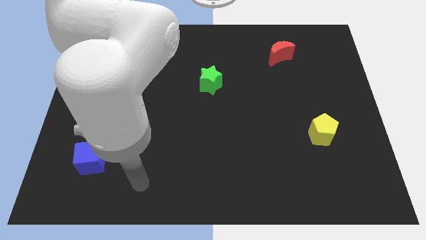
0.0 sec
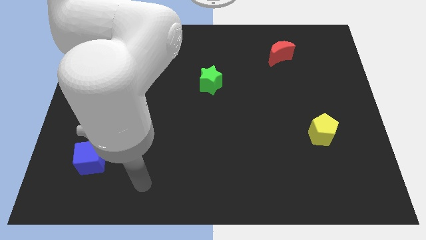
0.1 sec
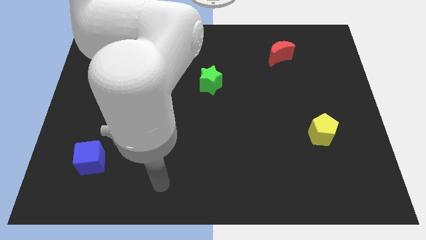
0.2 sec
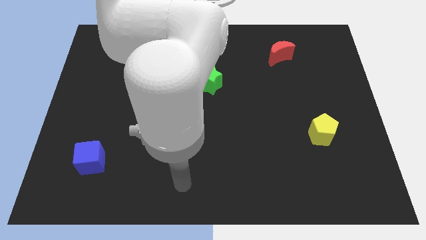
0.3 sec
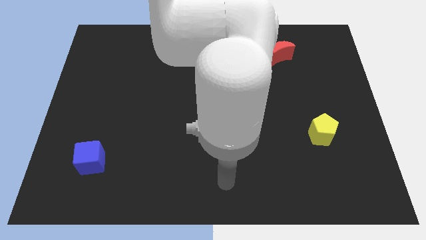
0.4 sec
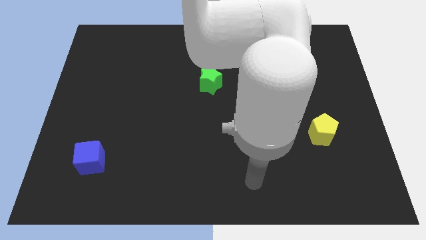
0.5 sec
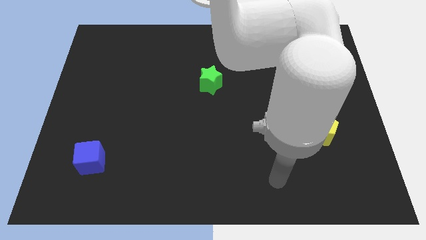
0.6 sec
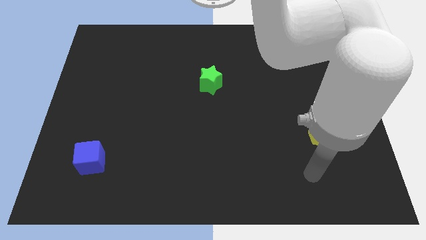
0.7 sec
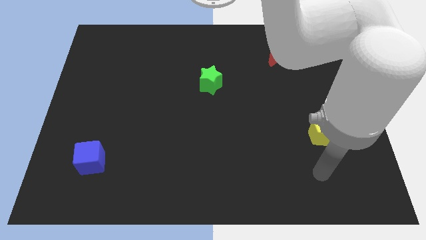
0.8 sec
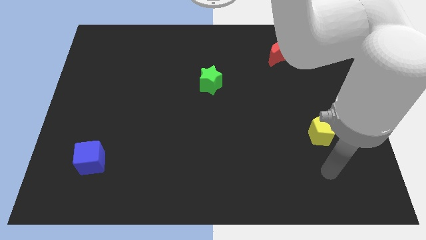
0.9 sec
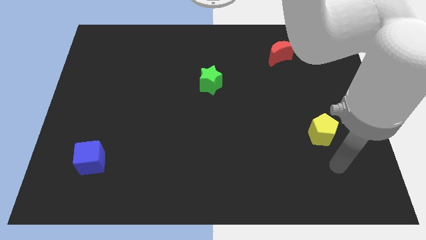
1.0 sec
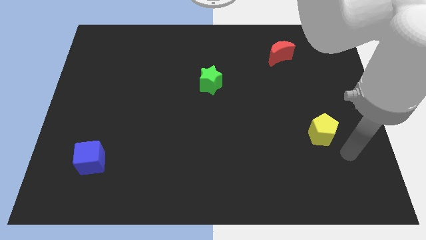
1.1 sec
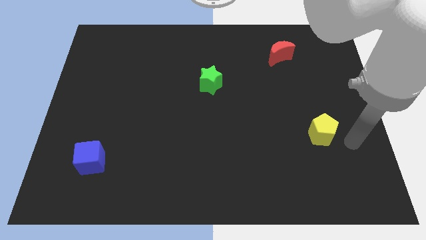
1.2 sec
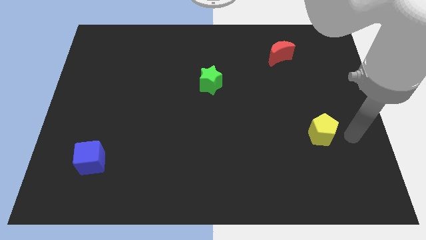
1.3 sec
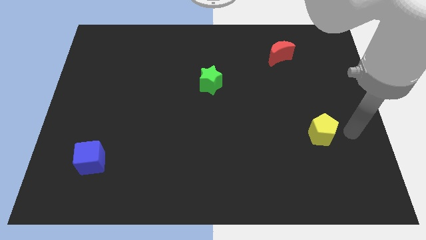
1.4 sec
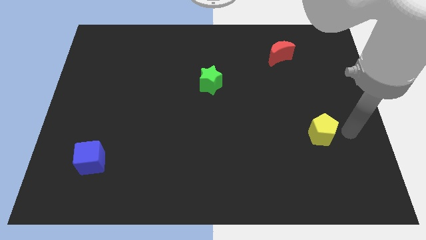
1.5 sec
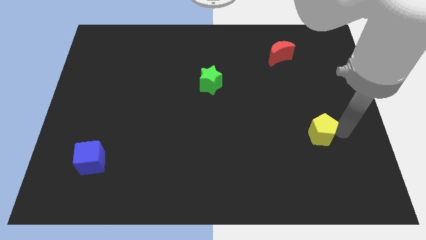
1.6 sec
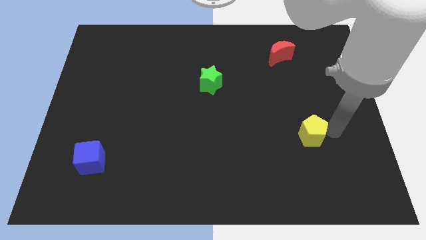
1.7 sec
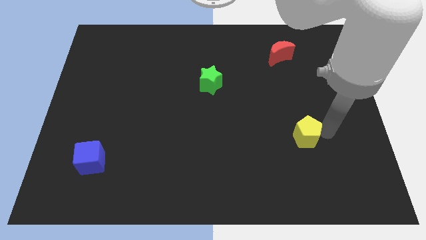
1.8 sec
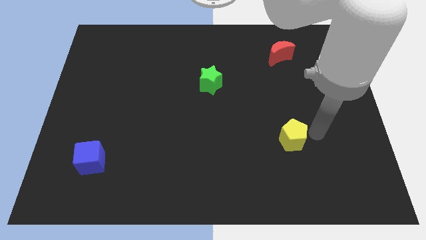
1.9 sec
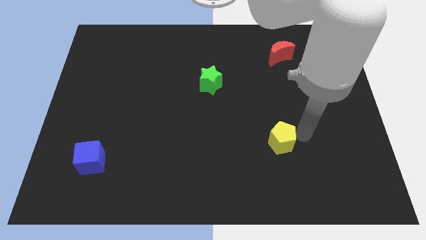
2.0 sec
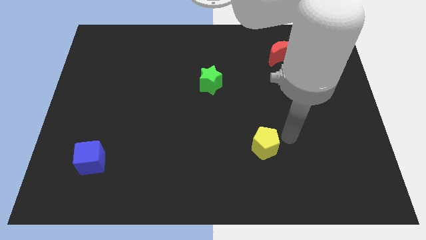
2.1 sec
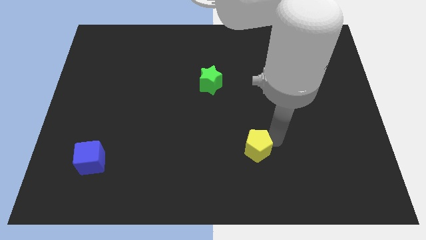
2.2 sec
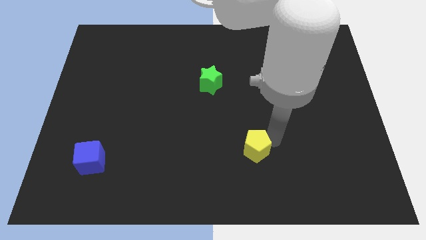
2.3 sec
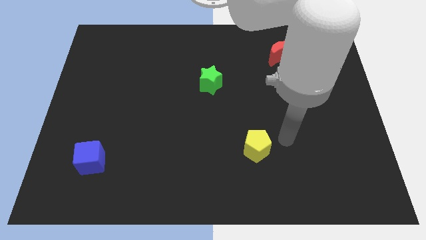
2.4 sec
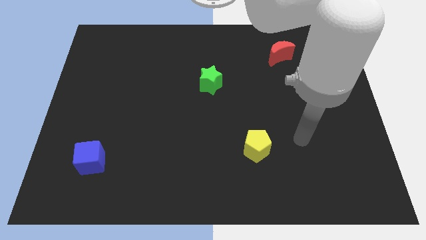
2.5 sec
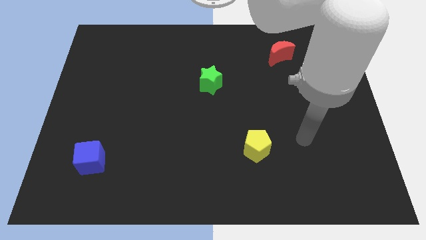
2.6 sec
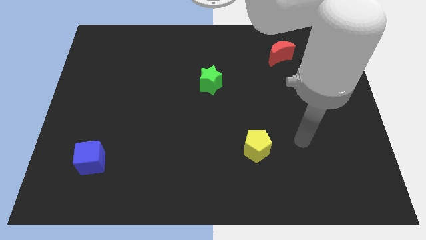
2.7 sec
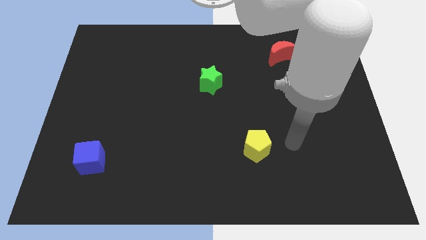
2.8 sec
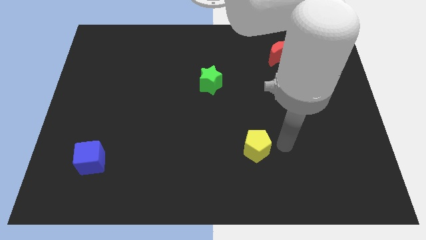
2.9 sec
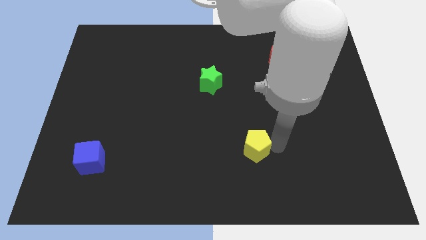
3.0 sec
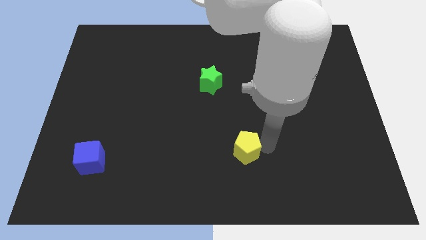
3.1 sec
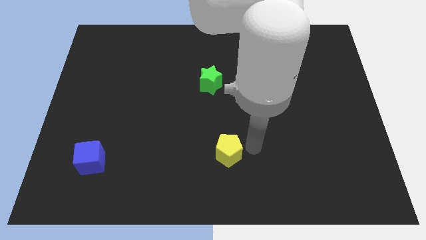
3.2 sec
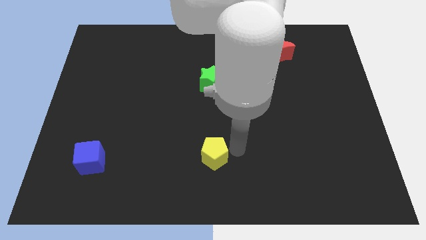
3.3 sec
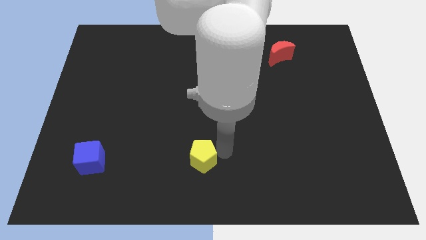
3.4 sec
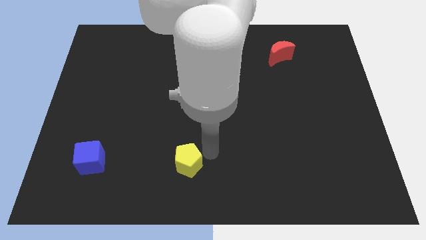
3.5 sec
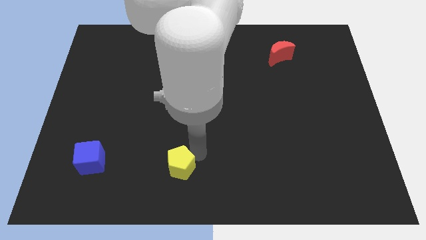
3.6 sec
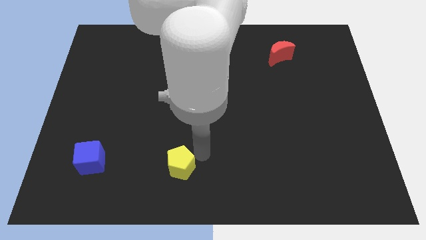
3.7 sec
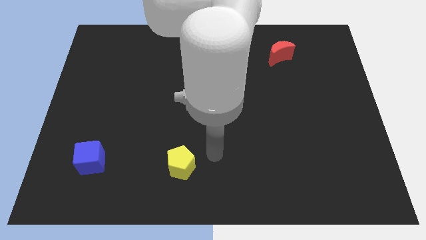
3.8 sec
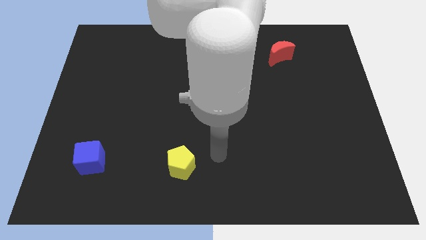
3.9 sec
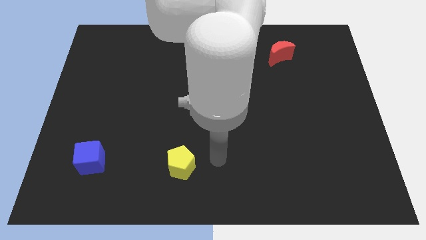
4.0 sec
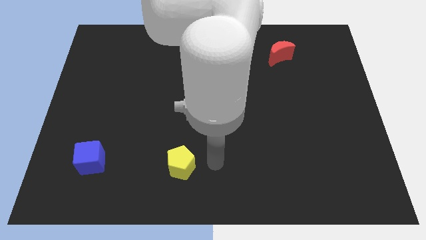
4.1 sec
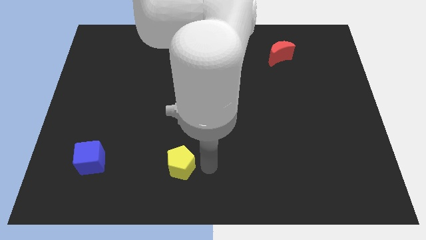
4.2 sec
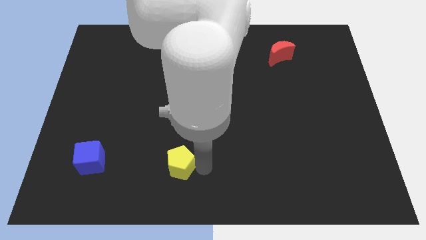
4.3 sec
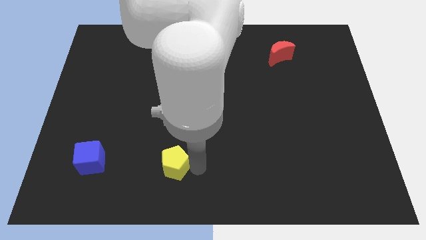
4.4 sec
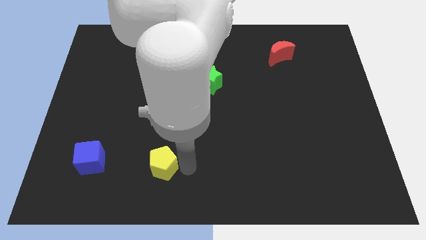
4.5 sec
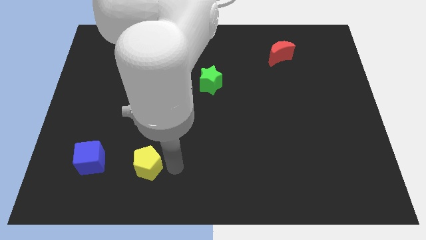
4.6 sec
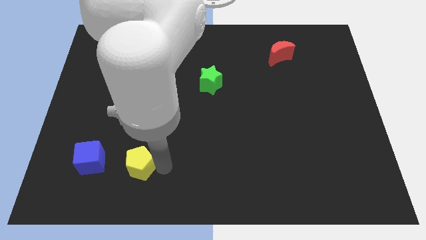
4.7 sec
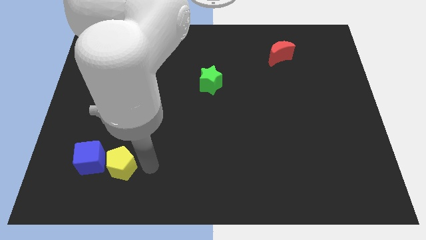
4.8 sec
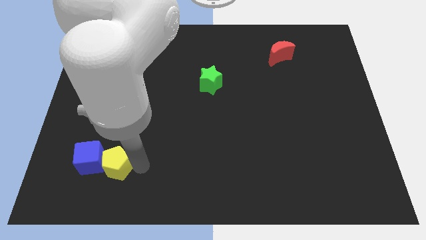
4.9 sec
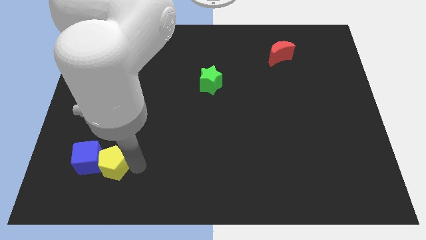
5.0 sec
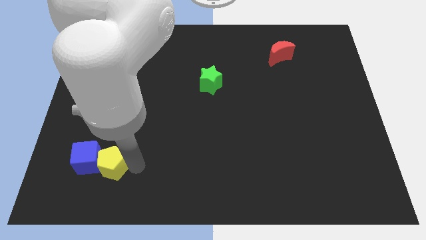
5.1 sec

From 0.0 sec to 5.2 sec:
move the yellow block to the blue cube

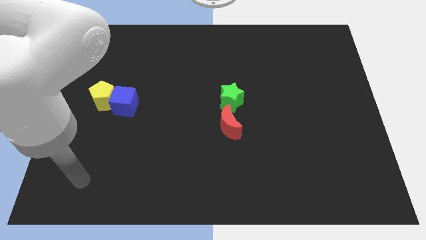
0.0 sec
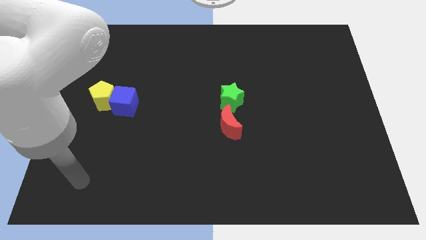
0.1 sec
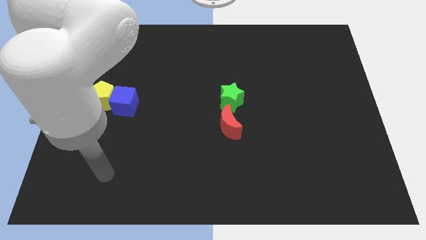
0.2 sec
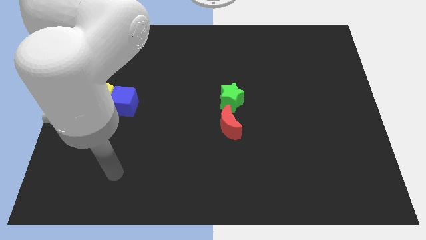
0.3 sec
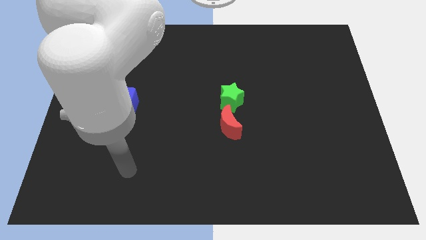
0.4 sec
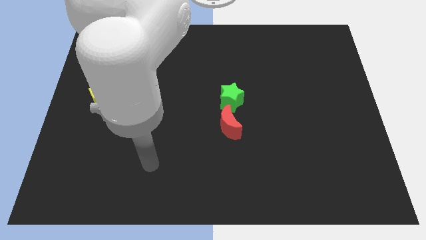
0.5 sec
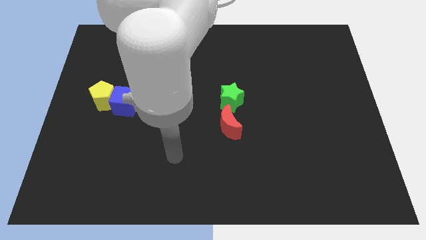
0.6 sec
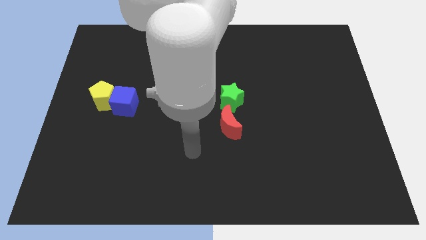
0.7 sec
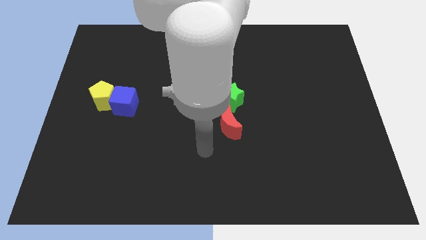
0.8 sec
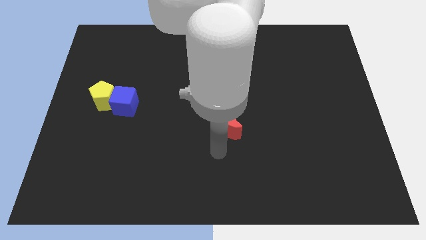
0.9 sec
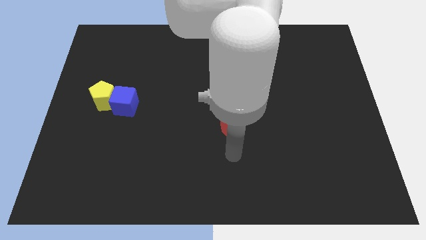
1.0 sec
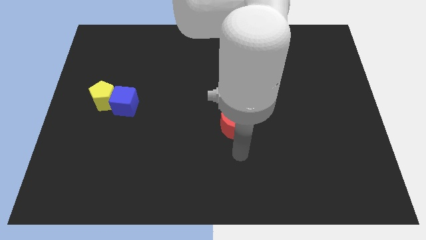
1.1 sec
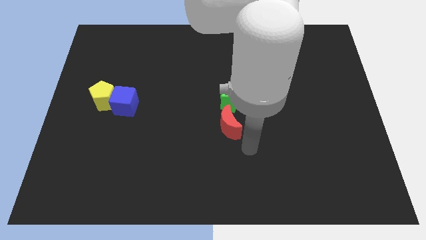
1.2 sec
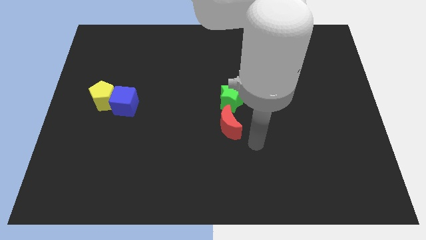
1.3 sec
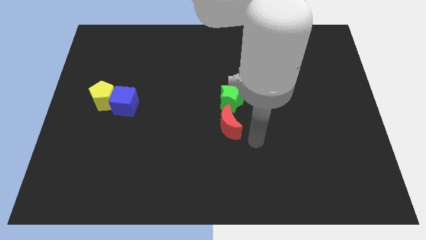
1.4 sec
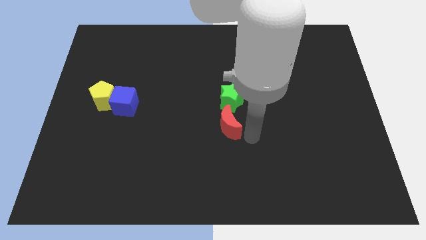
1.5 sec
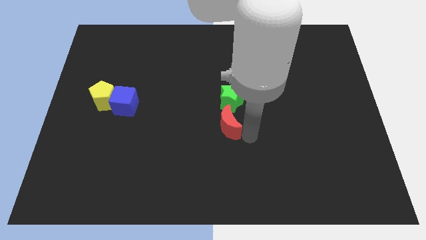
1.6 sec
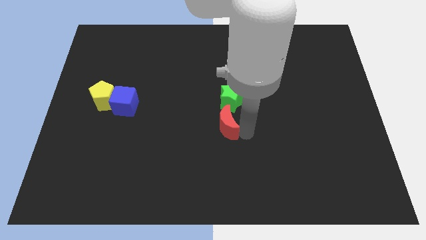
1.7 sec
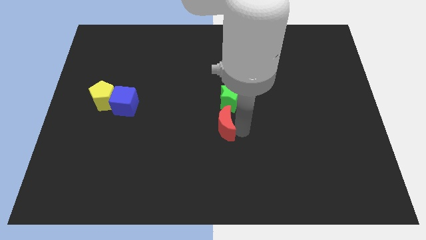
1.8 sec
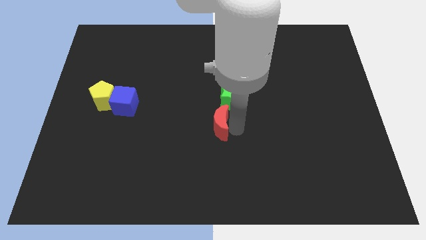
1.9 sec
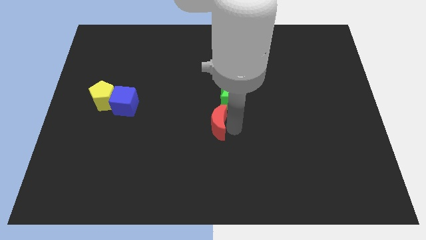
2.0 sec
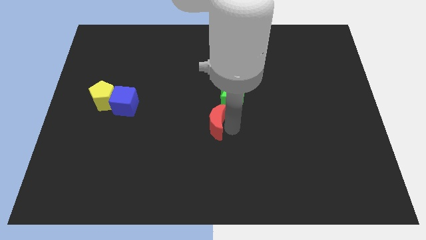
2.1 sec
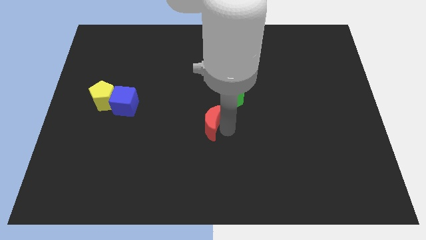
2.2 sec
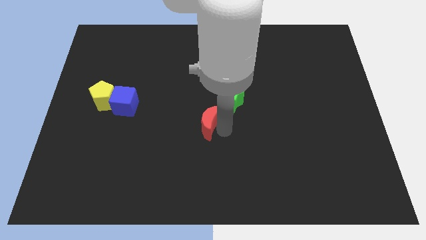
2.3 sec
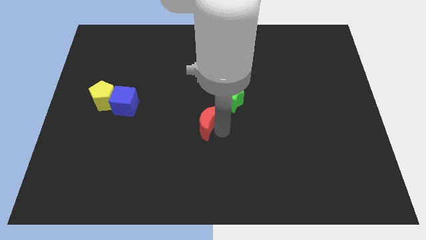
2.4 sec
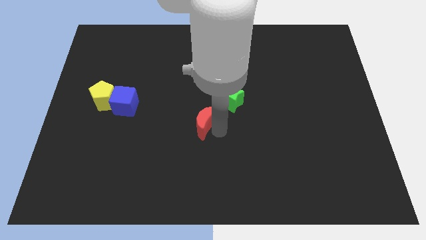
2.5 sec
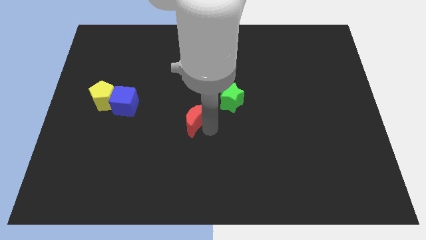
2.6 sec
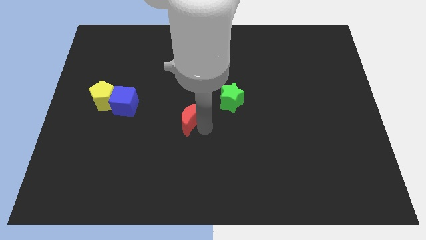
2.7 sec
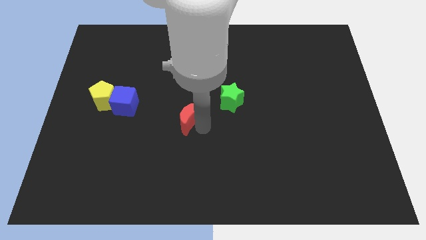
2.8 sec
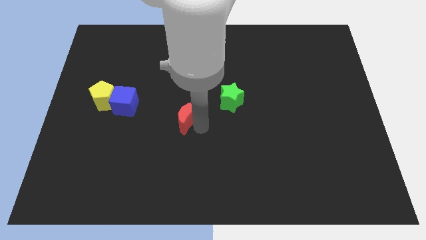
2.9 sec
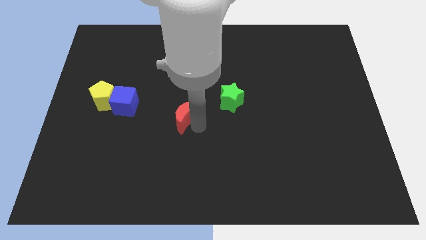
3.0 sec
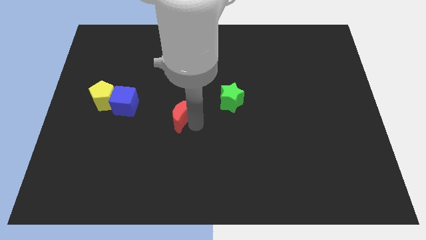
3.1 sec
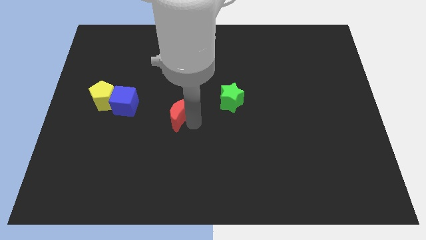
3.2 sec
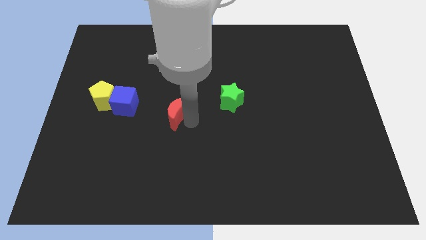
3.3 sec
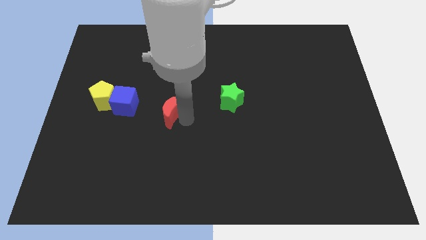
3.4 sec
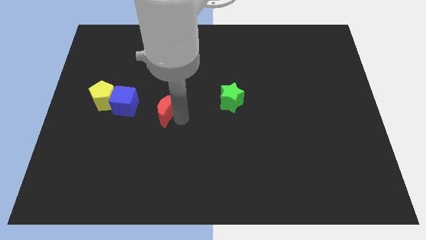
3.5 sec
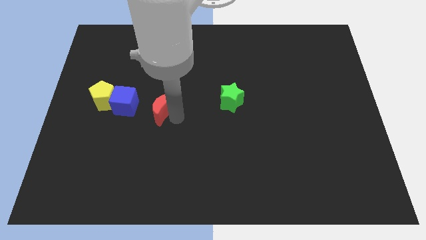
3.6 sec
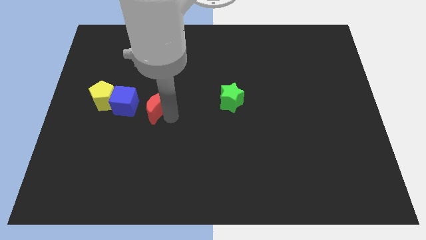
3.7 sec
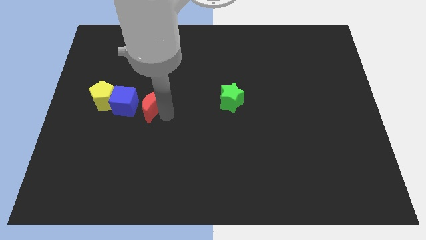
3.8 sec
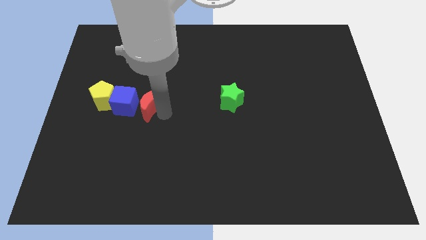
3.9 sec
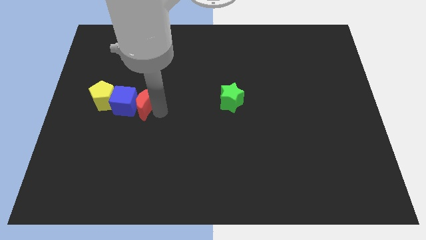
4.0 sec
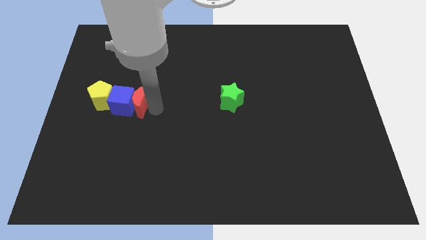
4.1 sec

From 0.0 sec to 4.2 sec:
move the red moon towards the blue block
